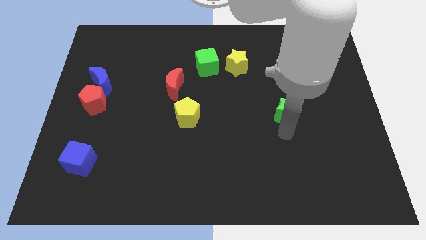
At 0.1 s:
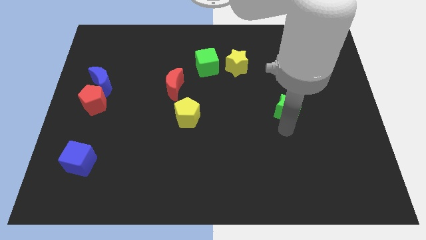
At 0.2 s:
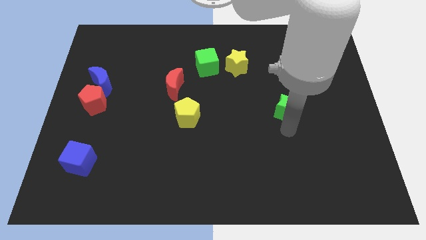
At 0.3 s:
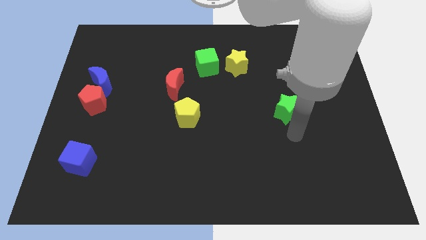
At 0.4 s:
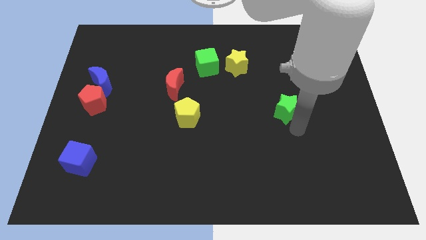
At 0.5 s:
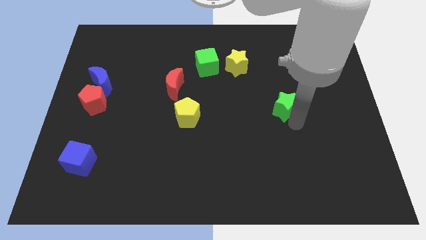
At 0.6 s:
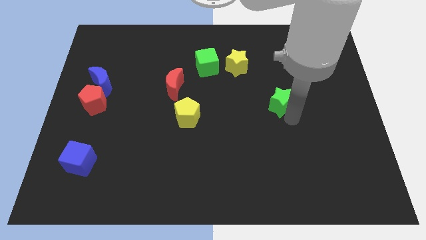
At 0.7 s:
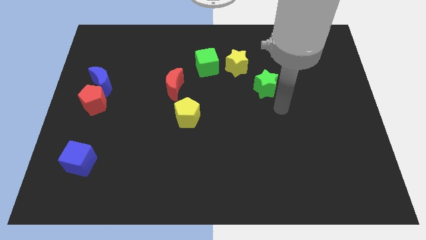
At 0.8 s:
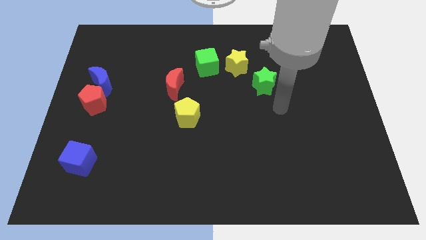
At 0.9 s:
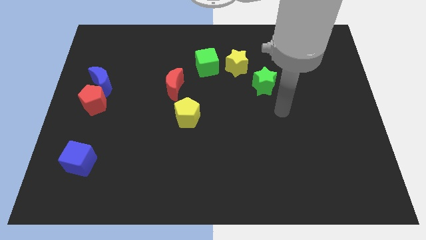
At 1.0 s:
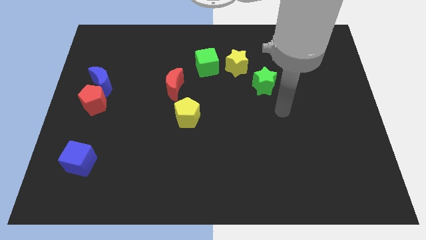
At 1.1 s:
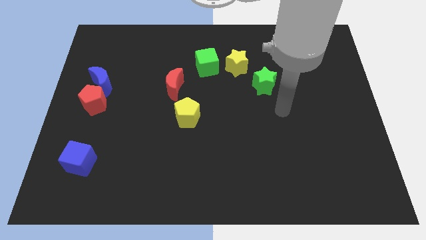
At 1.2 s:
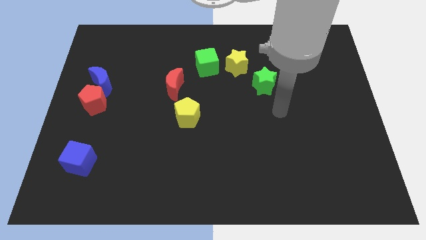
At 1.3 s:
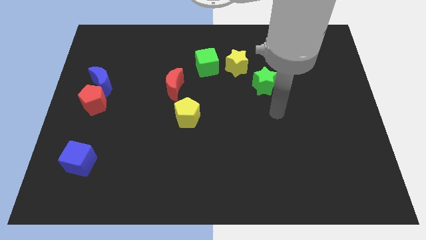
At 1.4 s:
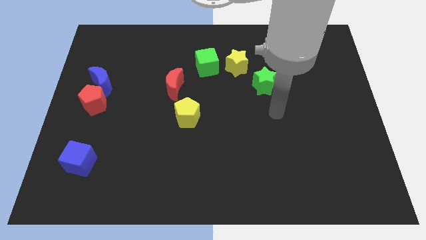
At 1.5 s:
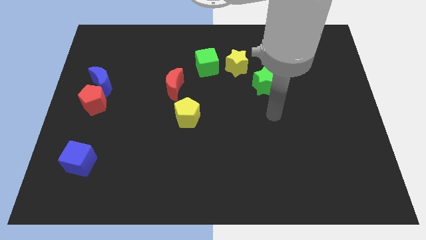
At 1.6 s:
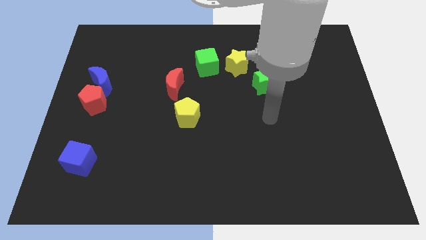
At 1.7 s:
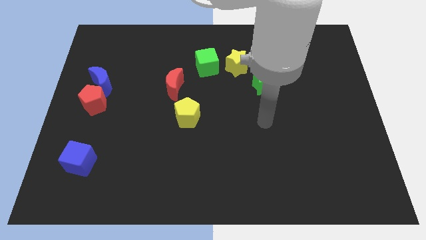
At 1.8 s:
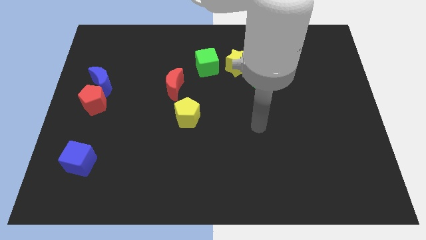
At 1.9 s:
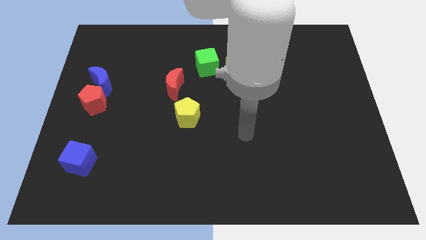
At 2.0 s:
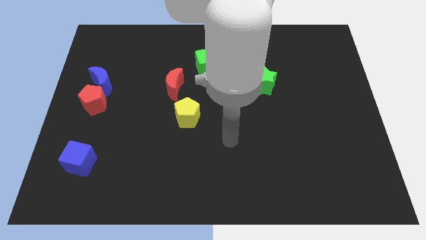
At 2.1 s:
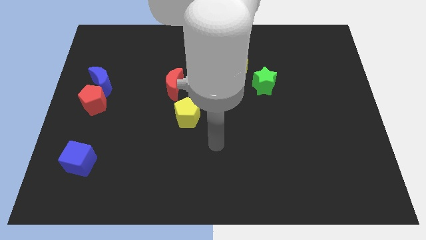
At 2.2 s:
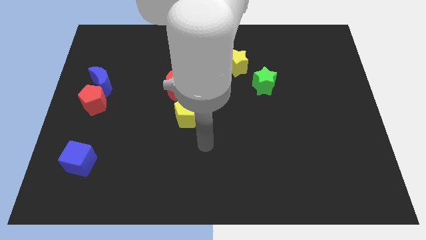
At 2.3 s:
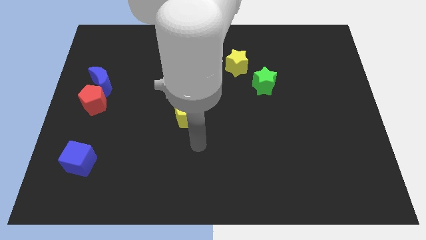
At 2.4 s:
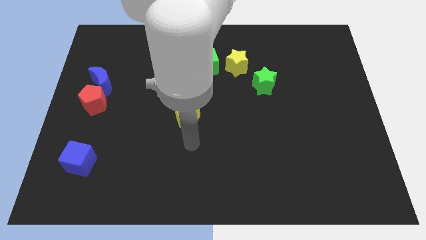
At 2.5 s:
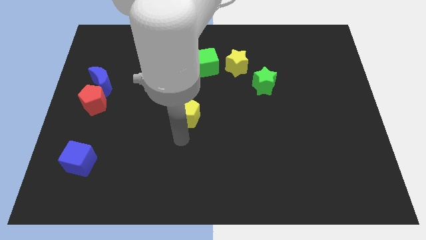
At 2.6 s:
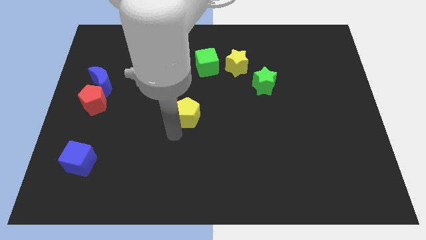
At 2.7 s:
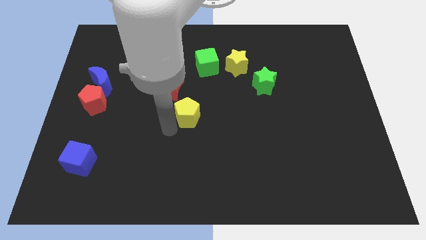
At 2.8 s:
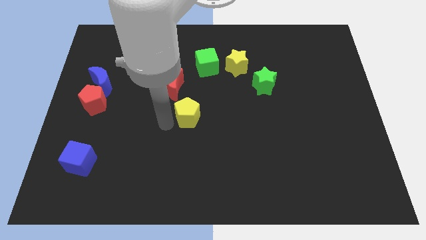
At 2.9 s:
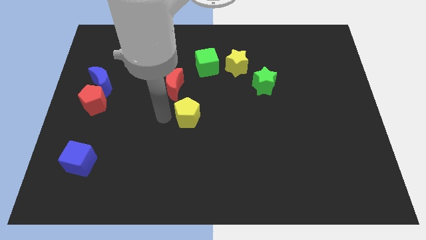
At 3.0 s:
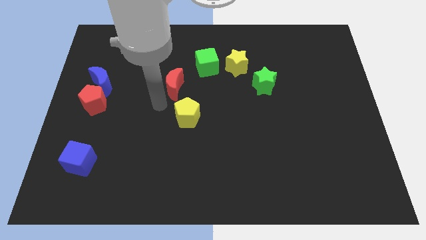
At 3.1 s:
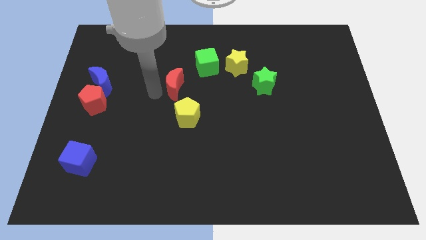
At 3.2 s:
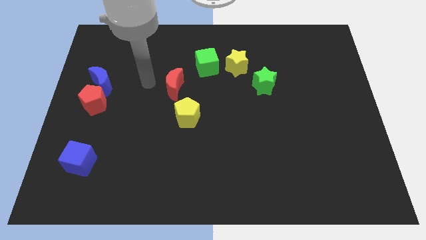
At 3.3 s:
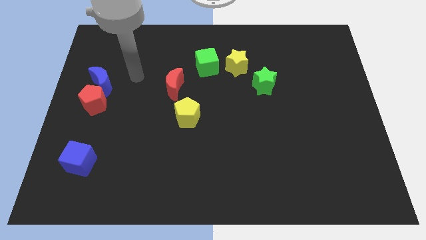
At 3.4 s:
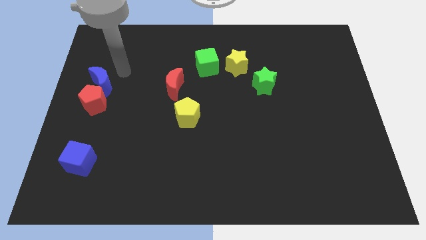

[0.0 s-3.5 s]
place the green star at the bottom right side of the yellow star

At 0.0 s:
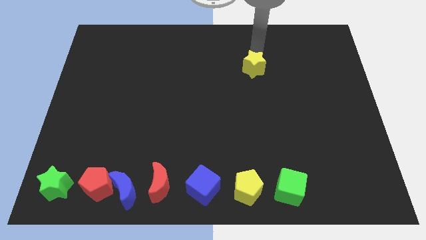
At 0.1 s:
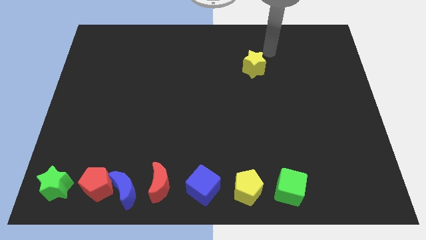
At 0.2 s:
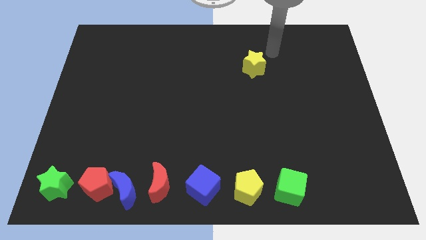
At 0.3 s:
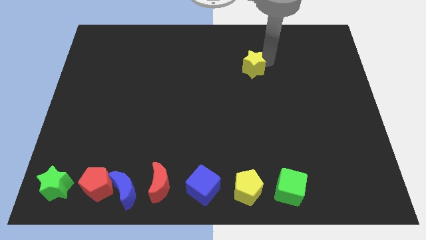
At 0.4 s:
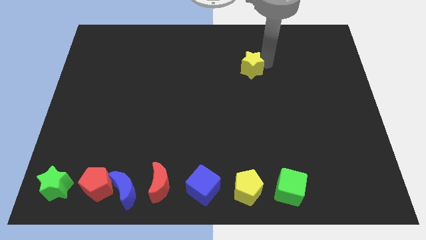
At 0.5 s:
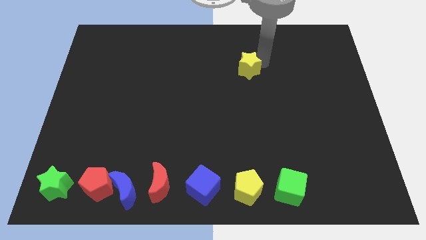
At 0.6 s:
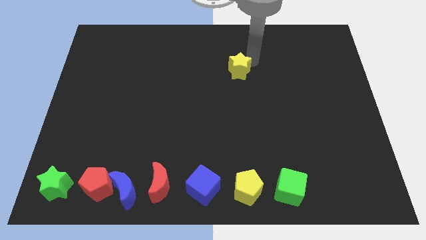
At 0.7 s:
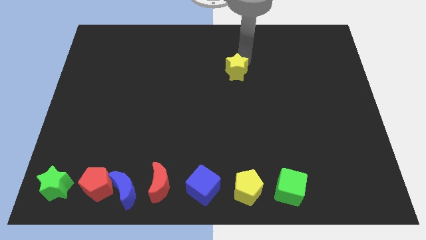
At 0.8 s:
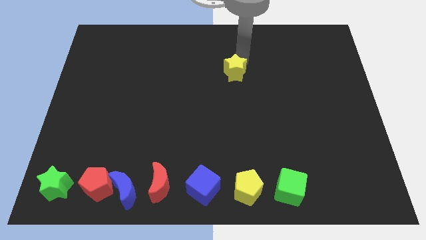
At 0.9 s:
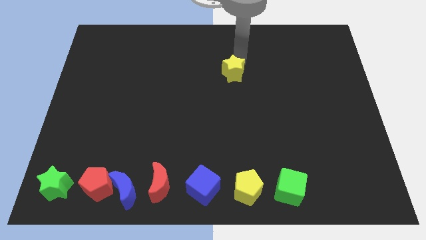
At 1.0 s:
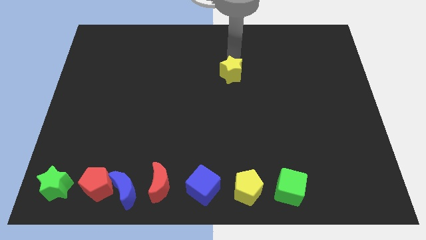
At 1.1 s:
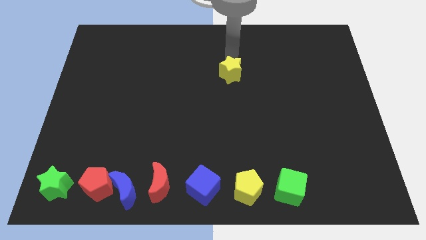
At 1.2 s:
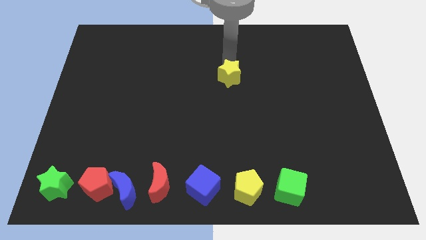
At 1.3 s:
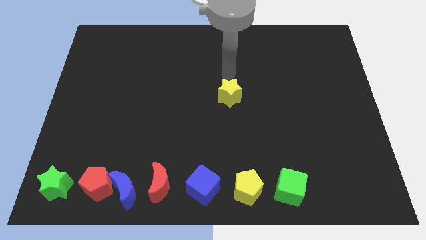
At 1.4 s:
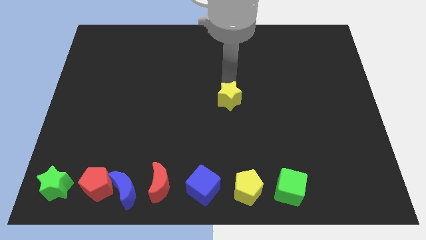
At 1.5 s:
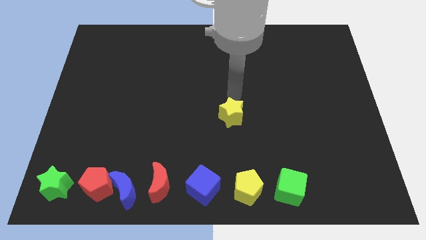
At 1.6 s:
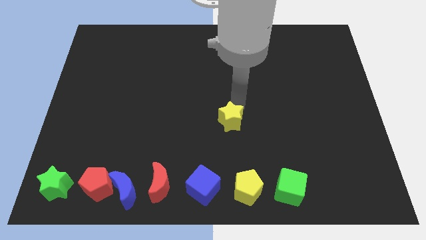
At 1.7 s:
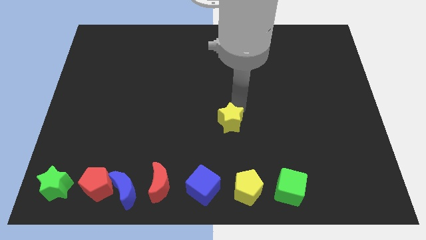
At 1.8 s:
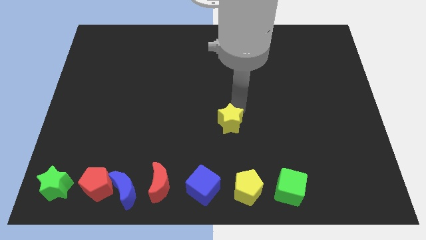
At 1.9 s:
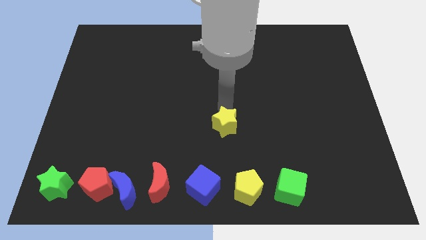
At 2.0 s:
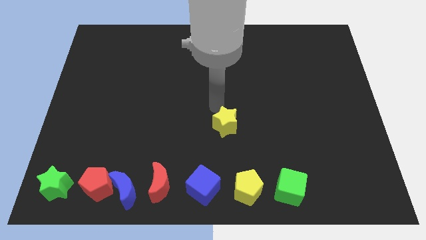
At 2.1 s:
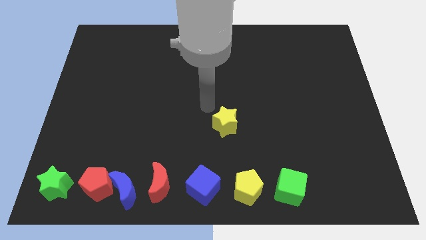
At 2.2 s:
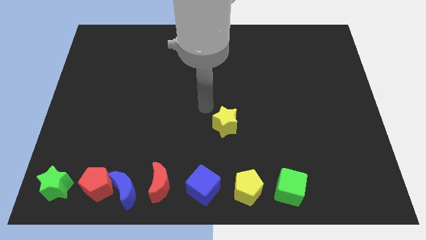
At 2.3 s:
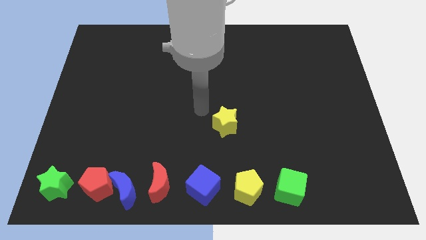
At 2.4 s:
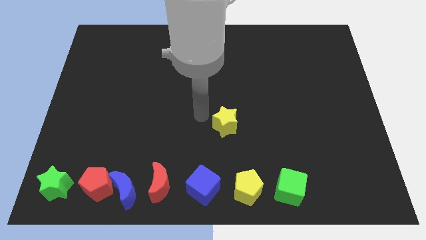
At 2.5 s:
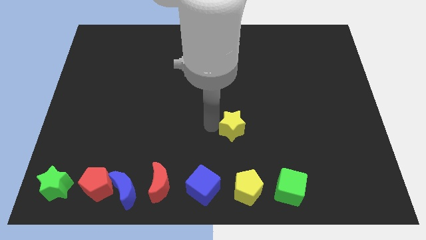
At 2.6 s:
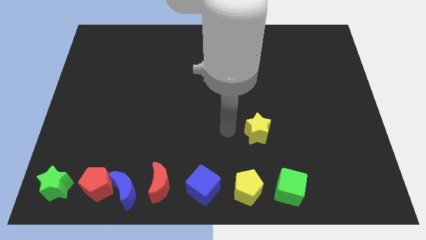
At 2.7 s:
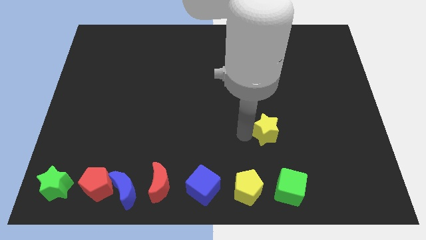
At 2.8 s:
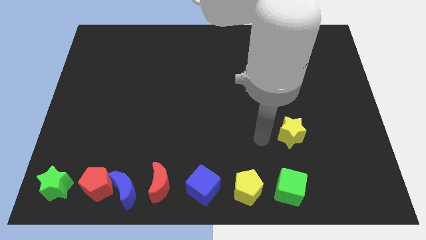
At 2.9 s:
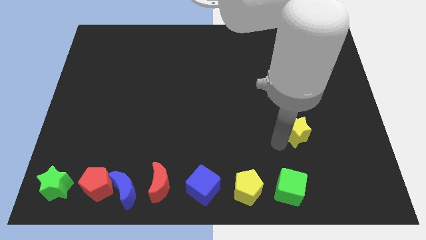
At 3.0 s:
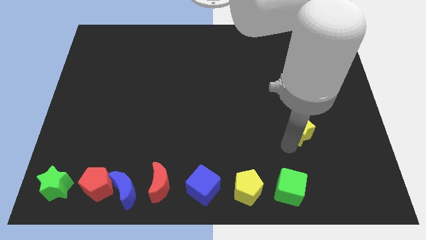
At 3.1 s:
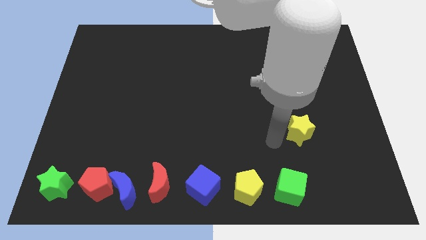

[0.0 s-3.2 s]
push the yellow star parallel to the green cube

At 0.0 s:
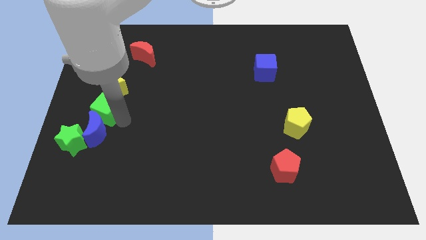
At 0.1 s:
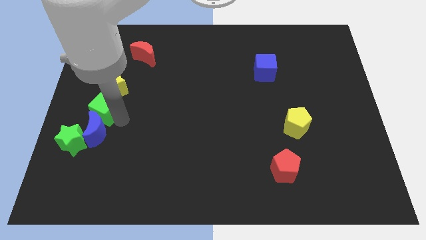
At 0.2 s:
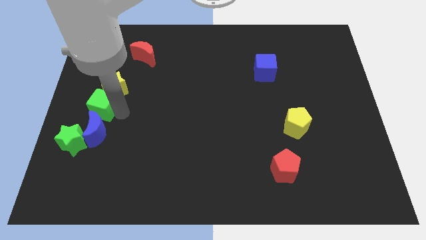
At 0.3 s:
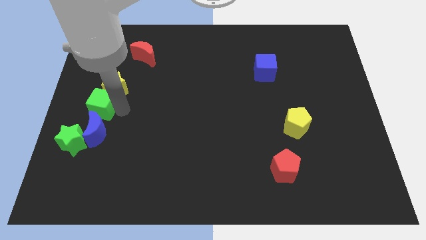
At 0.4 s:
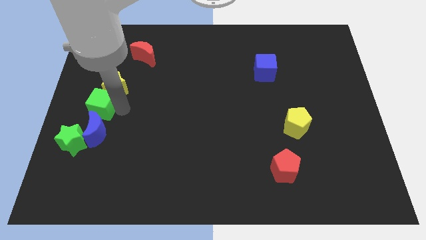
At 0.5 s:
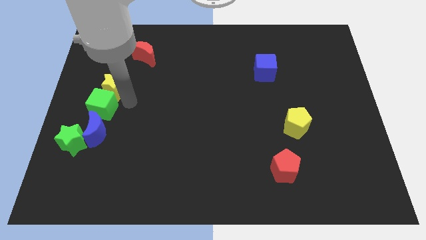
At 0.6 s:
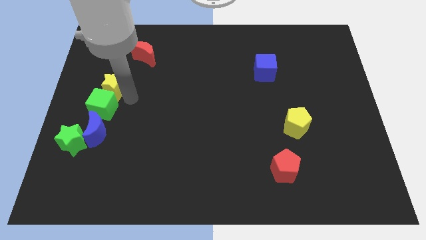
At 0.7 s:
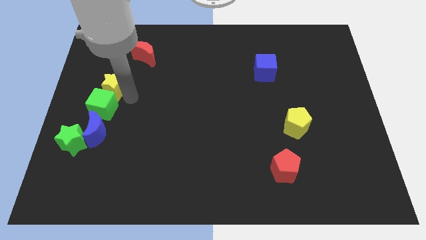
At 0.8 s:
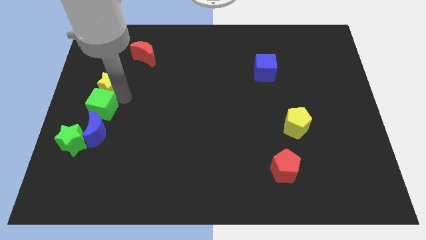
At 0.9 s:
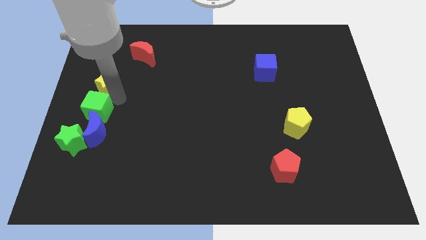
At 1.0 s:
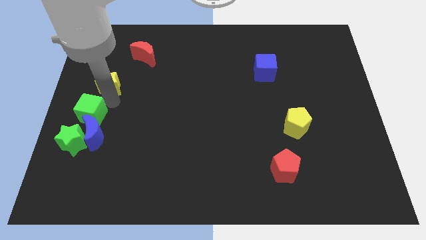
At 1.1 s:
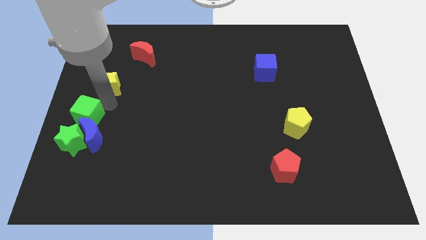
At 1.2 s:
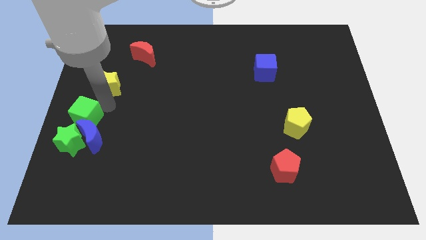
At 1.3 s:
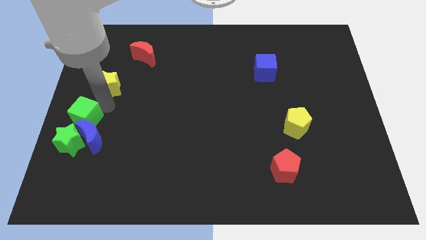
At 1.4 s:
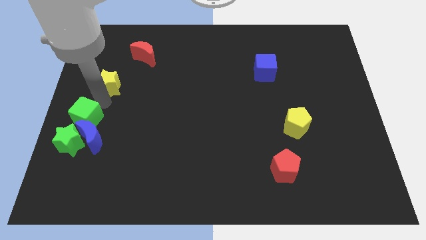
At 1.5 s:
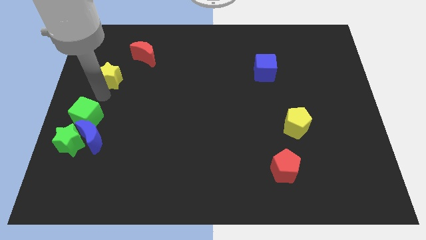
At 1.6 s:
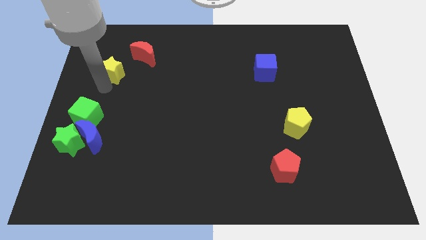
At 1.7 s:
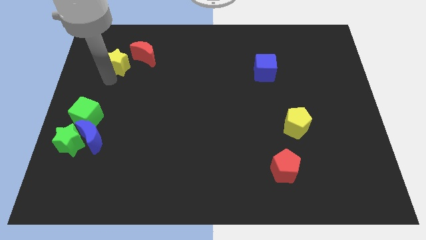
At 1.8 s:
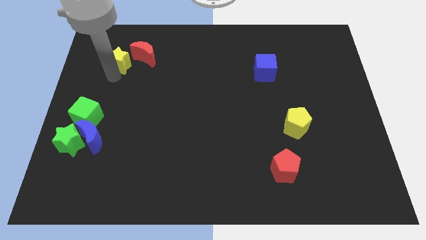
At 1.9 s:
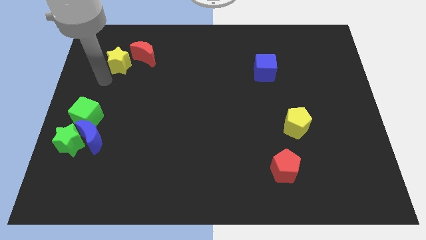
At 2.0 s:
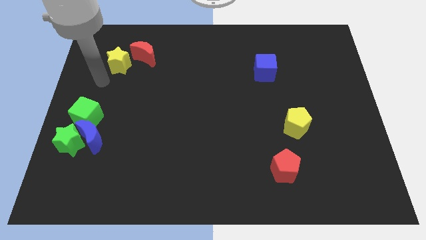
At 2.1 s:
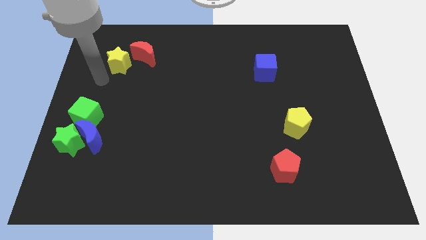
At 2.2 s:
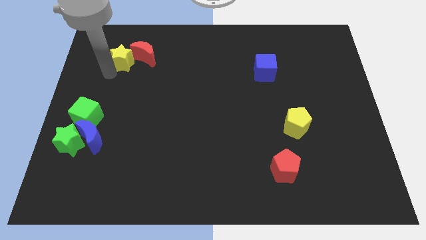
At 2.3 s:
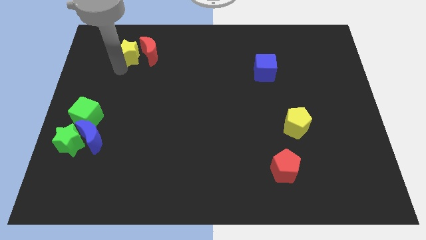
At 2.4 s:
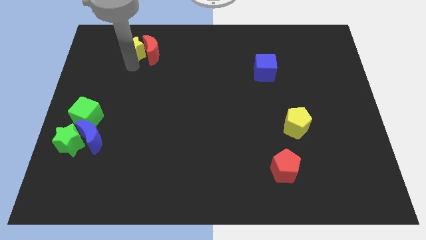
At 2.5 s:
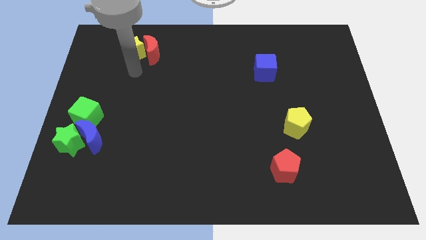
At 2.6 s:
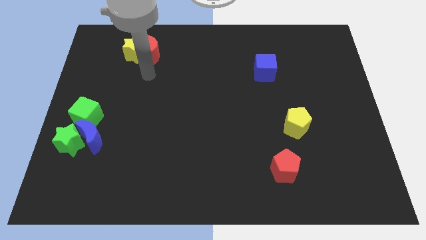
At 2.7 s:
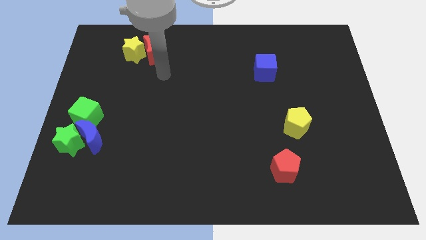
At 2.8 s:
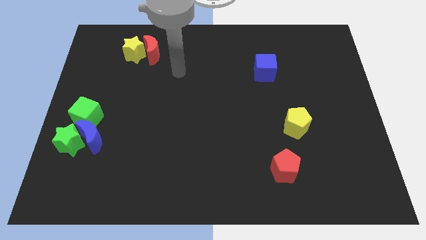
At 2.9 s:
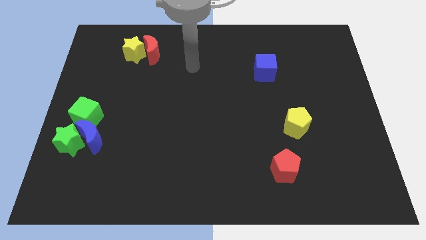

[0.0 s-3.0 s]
separate the yellow star and green cube
